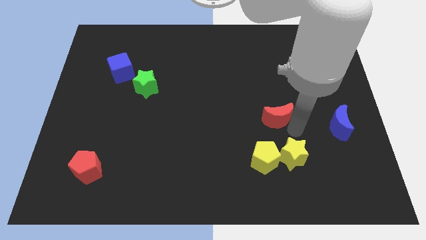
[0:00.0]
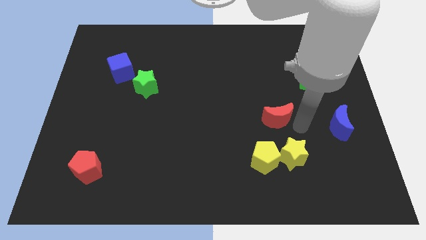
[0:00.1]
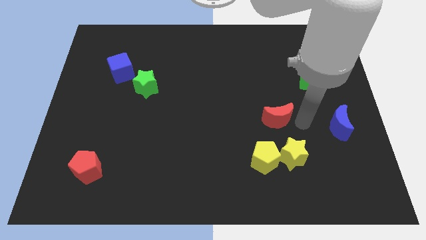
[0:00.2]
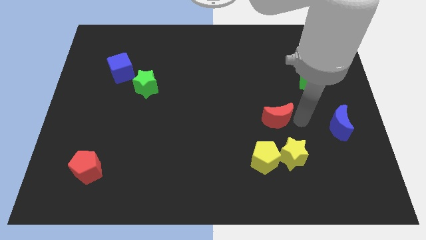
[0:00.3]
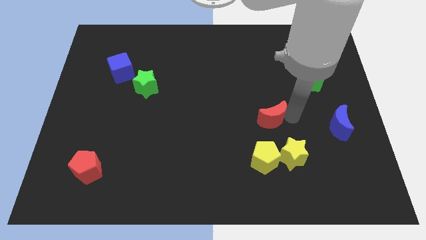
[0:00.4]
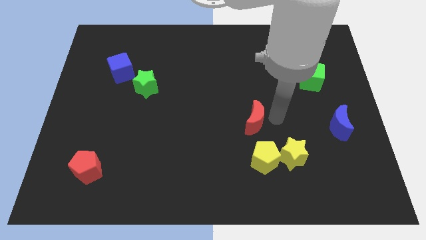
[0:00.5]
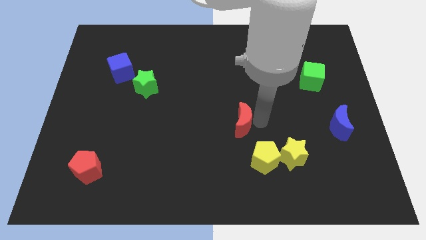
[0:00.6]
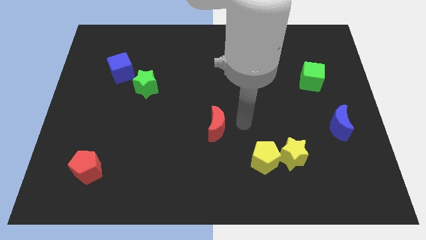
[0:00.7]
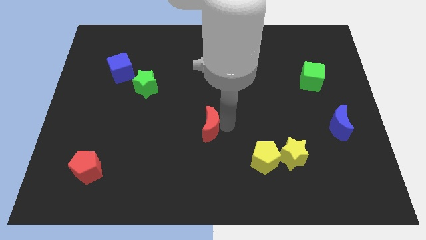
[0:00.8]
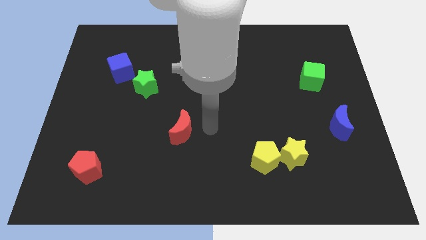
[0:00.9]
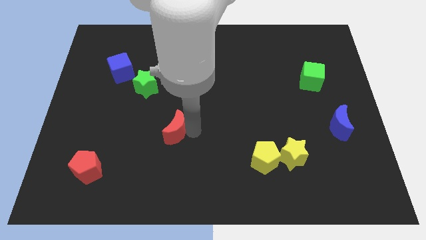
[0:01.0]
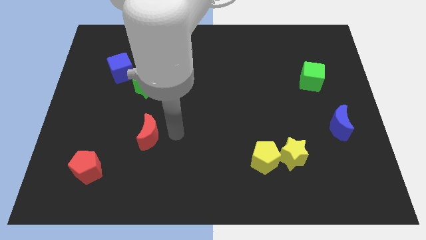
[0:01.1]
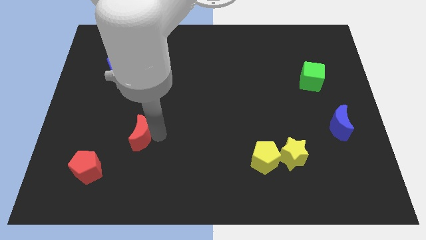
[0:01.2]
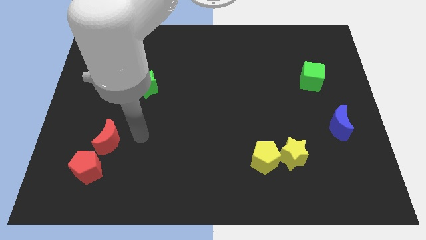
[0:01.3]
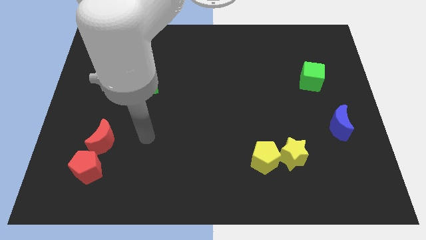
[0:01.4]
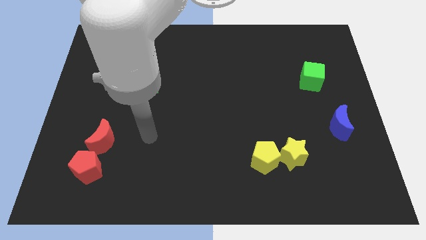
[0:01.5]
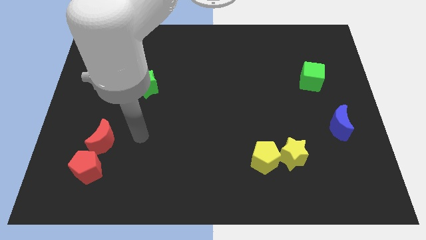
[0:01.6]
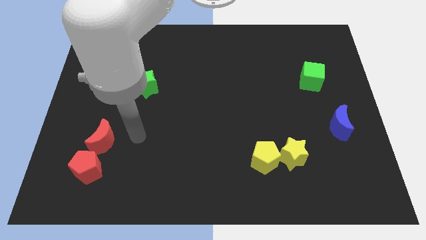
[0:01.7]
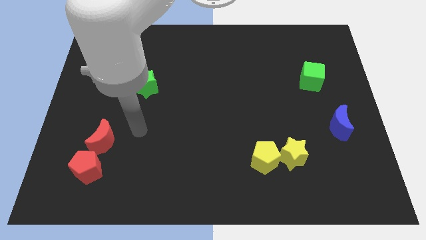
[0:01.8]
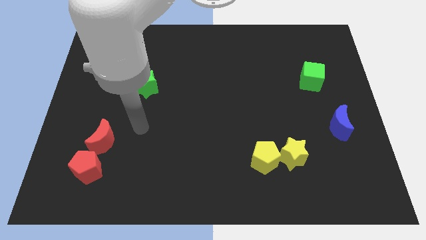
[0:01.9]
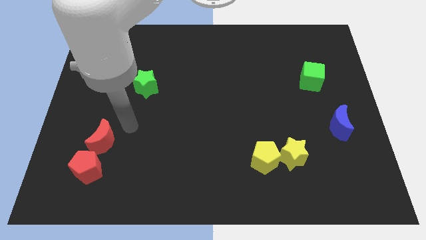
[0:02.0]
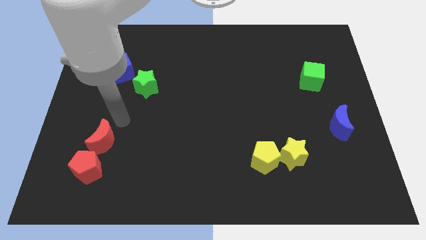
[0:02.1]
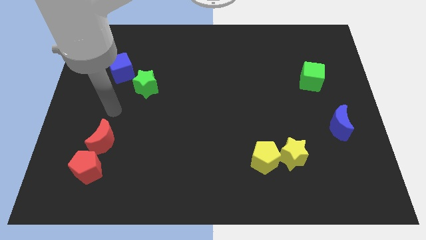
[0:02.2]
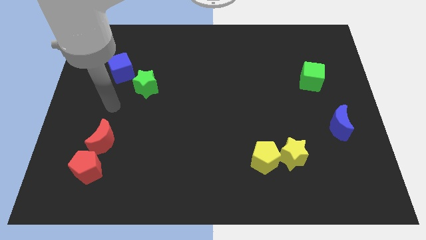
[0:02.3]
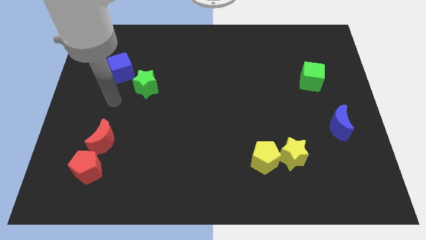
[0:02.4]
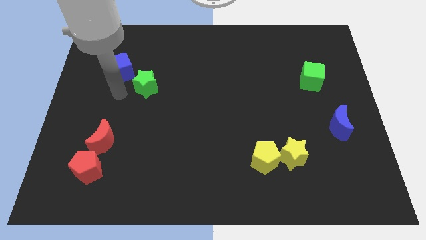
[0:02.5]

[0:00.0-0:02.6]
move the red moon to the top right side of the red pentagon

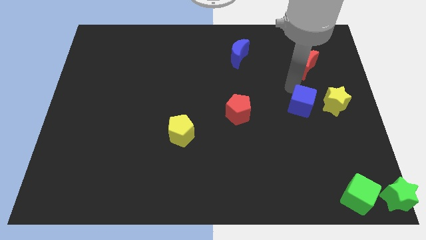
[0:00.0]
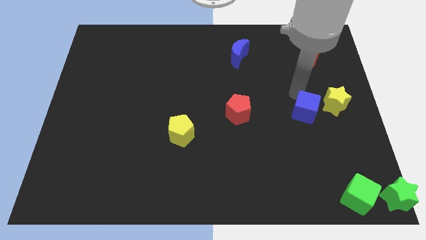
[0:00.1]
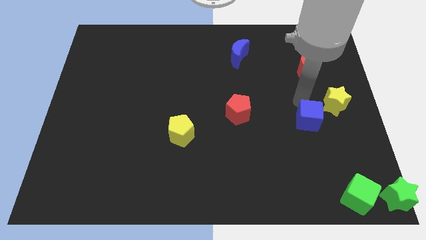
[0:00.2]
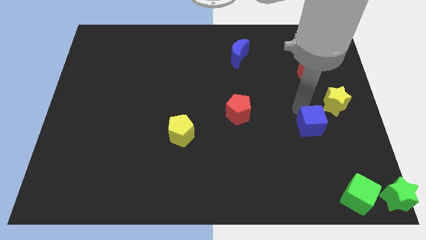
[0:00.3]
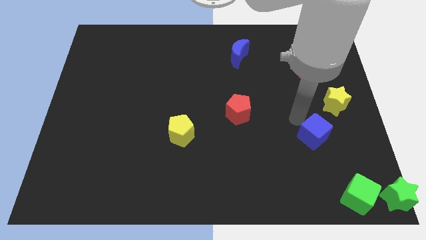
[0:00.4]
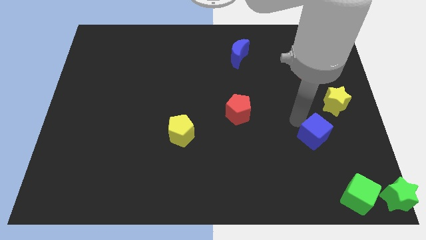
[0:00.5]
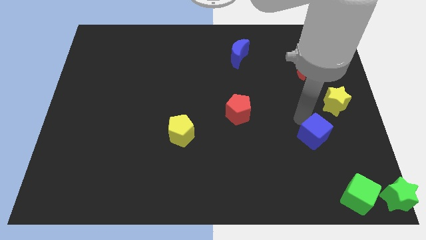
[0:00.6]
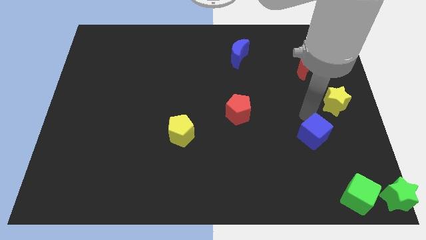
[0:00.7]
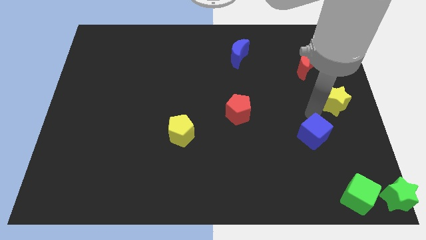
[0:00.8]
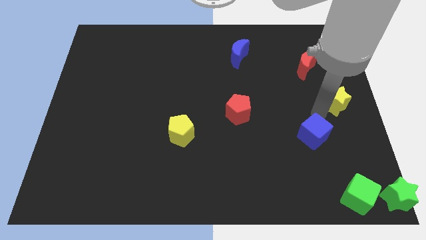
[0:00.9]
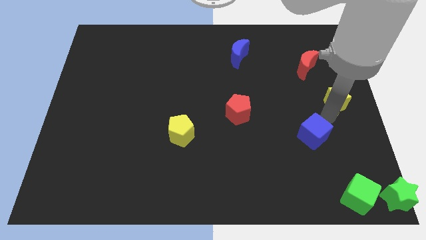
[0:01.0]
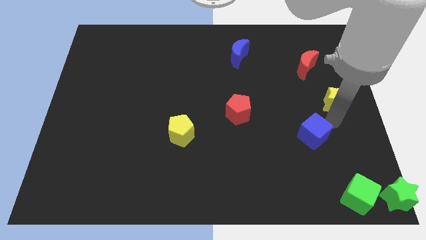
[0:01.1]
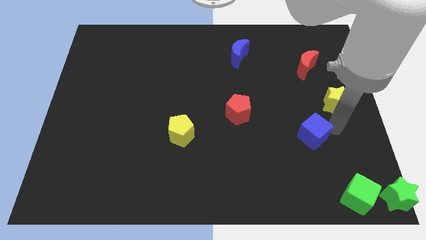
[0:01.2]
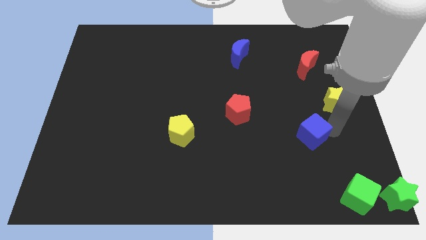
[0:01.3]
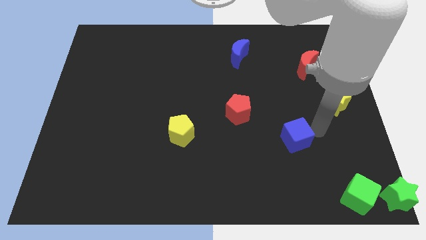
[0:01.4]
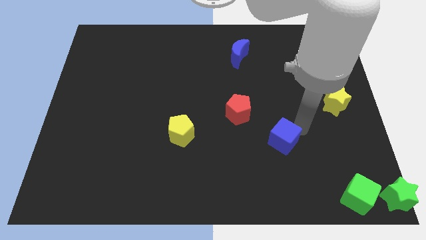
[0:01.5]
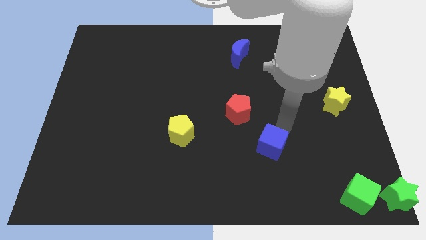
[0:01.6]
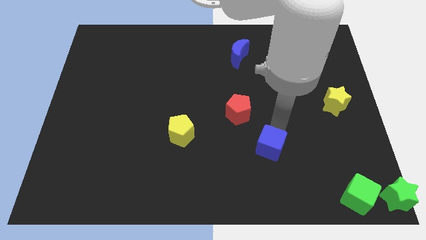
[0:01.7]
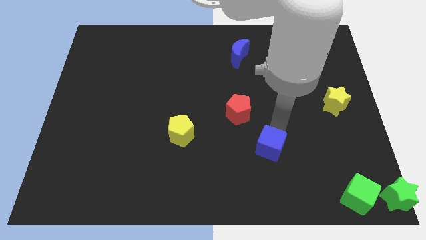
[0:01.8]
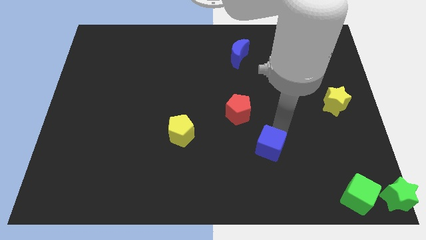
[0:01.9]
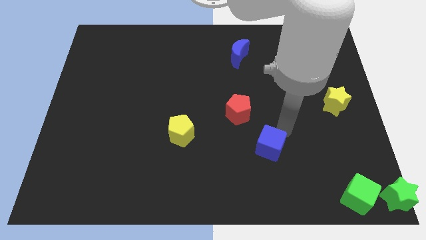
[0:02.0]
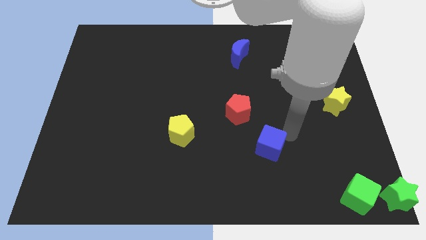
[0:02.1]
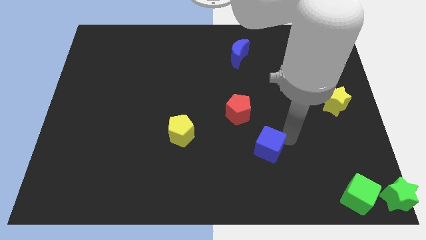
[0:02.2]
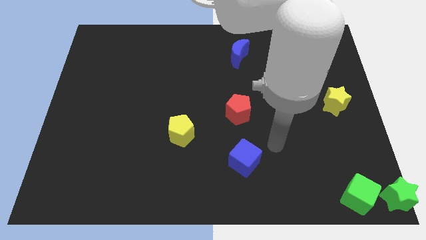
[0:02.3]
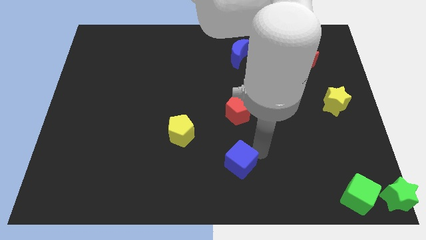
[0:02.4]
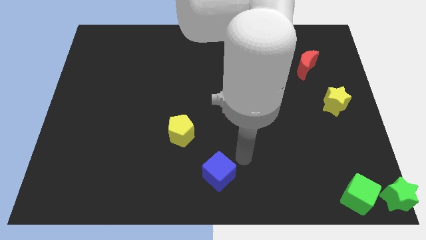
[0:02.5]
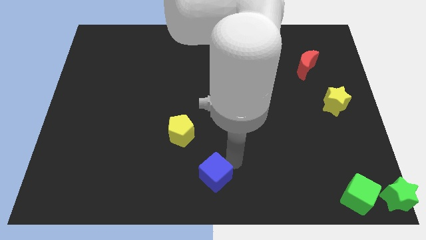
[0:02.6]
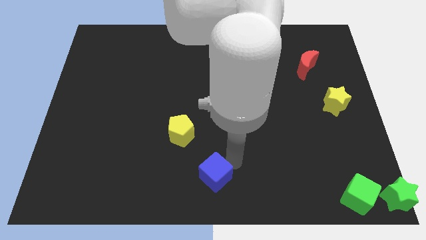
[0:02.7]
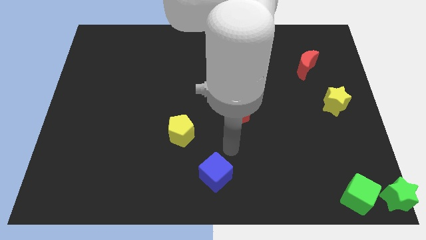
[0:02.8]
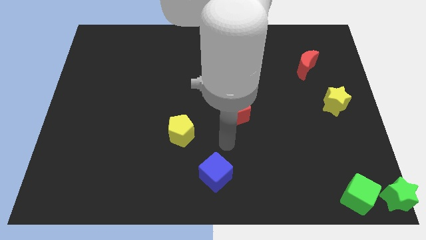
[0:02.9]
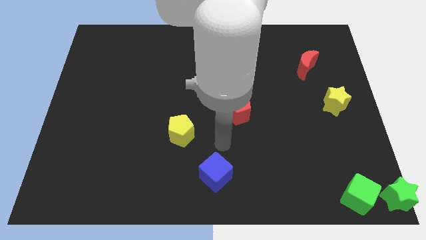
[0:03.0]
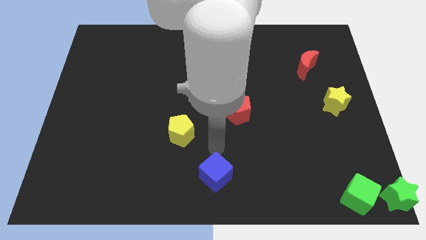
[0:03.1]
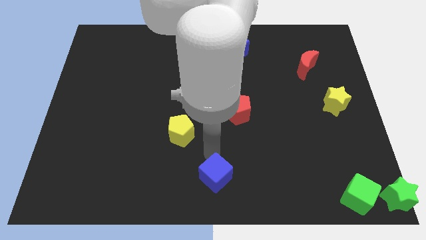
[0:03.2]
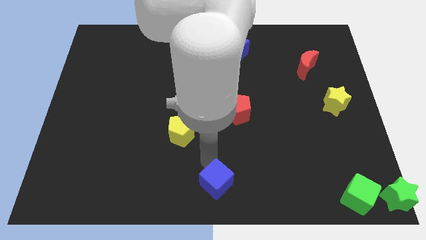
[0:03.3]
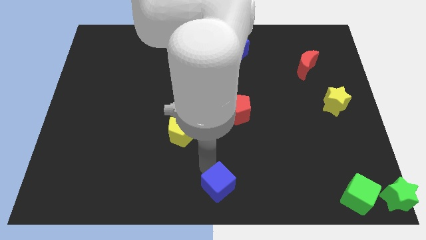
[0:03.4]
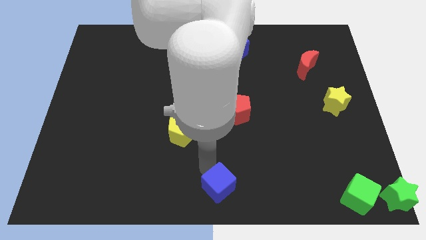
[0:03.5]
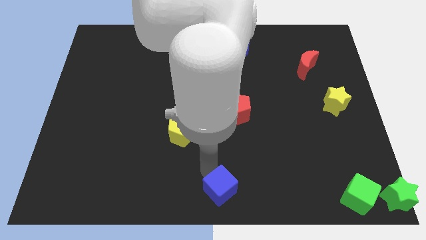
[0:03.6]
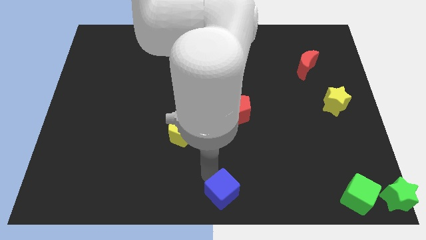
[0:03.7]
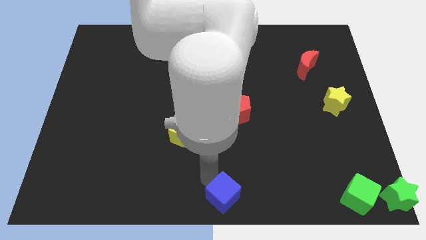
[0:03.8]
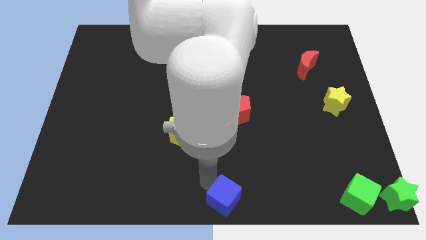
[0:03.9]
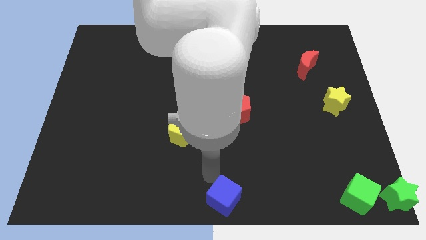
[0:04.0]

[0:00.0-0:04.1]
move the blue cube at the bottom center of the board

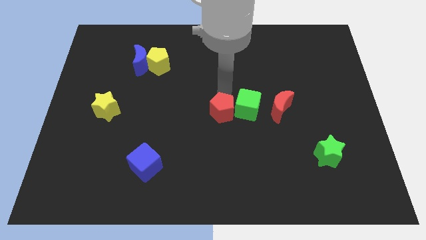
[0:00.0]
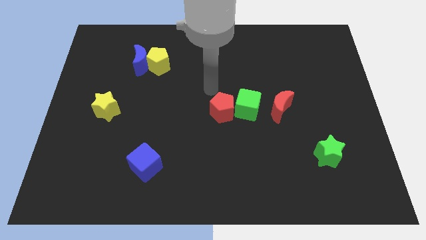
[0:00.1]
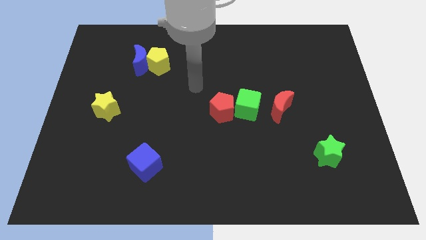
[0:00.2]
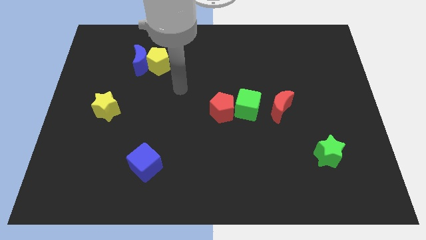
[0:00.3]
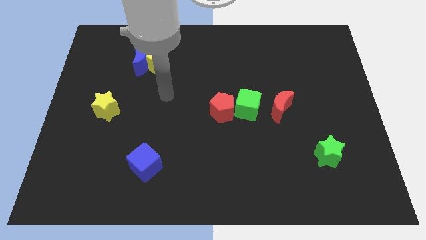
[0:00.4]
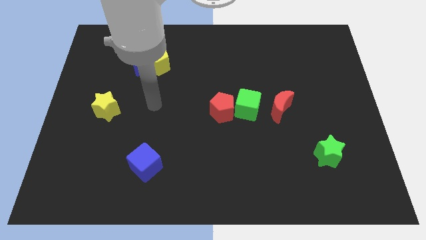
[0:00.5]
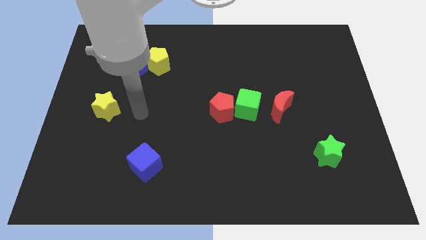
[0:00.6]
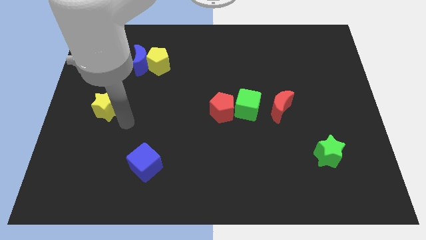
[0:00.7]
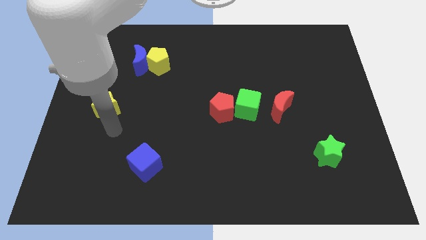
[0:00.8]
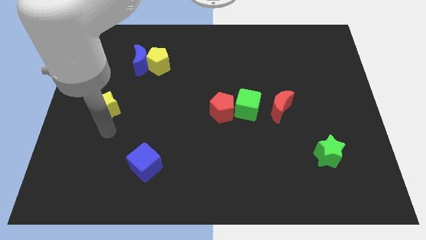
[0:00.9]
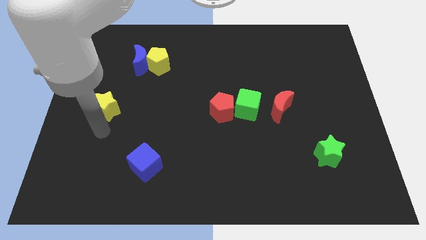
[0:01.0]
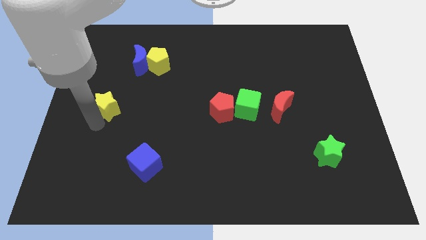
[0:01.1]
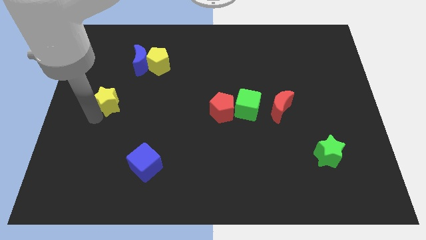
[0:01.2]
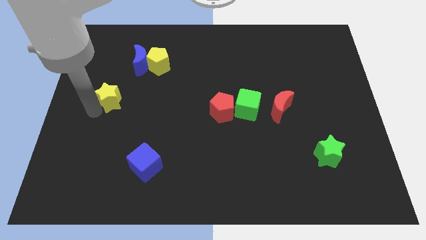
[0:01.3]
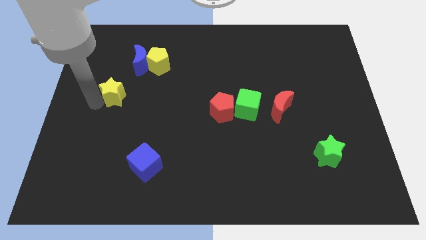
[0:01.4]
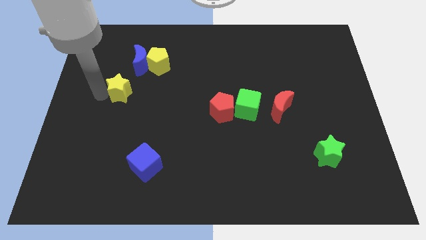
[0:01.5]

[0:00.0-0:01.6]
push yellow star slightly upwards

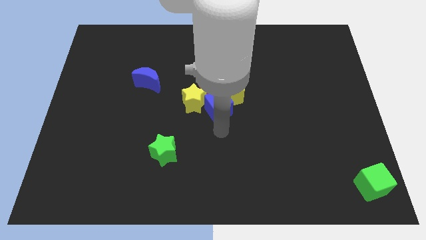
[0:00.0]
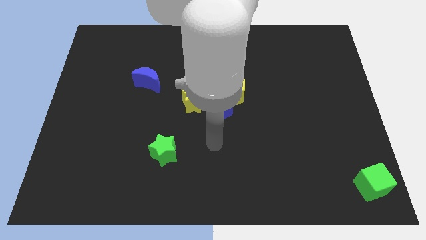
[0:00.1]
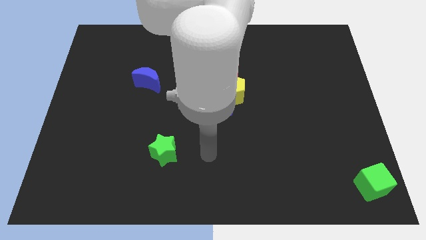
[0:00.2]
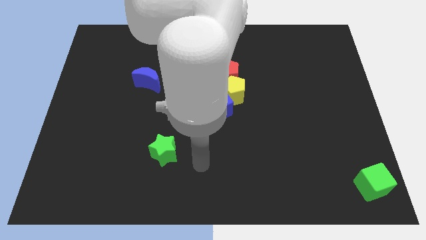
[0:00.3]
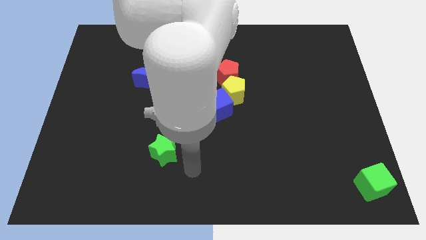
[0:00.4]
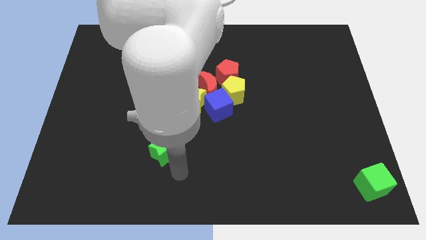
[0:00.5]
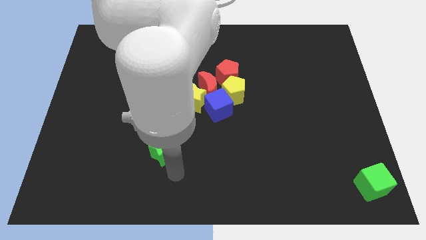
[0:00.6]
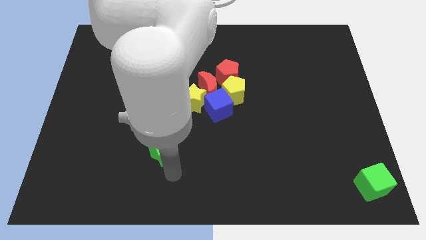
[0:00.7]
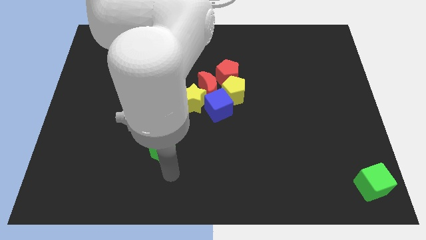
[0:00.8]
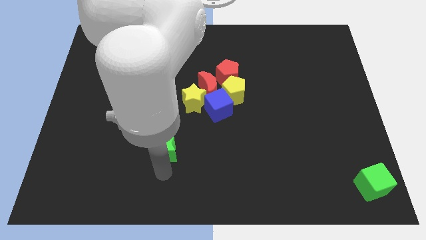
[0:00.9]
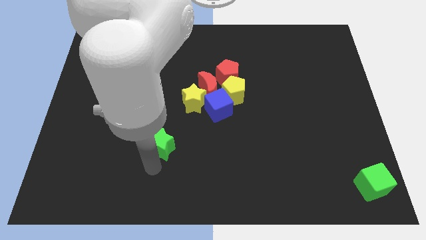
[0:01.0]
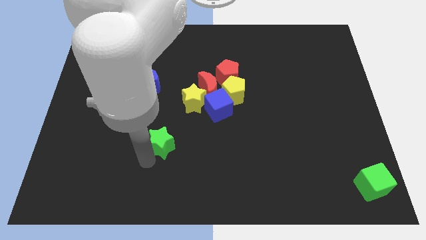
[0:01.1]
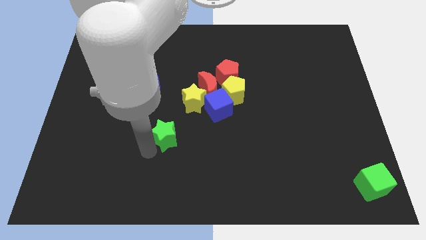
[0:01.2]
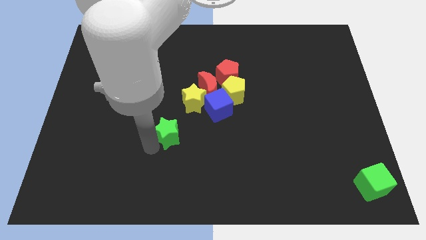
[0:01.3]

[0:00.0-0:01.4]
place the green star diagonally to yellow star
